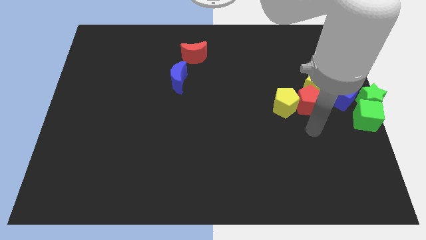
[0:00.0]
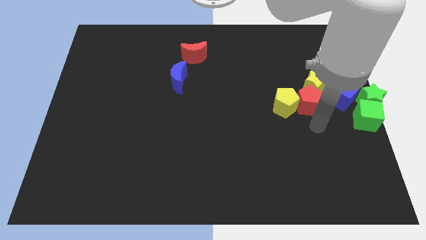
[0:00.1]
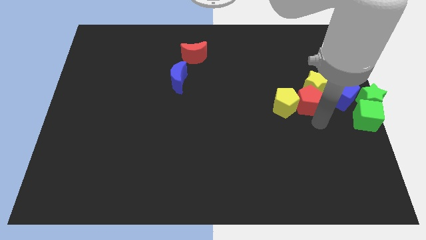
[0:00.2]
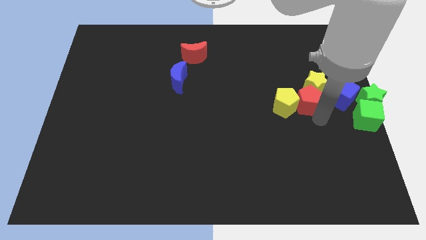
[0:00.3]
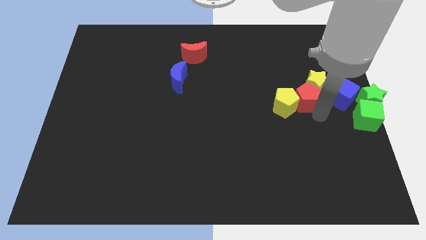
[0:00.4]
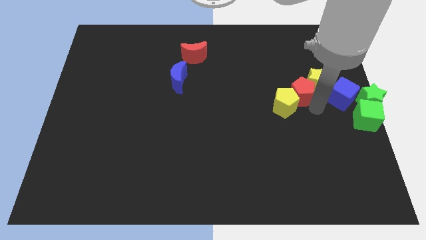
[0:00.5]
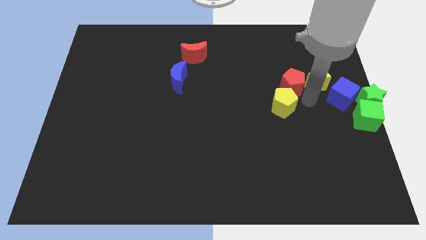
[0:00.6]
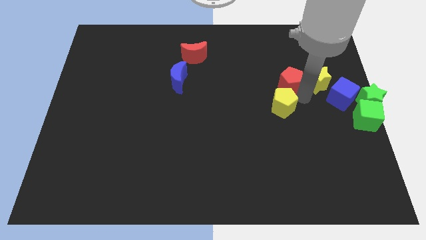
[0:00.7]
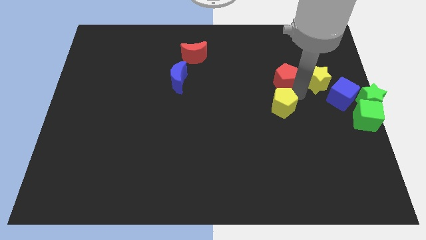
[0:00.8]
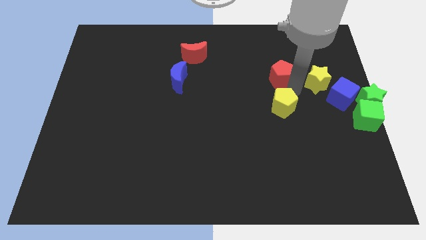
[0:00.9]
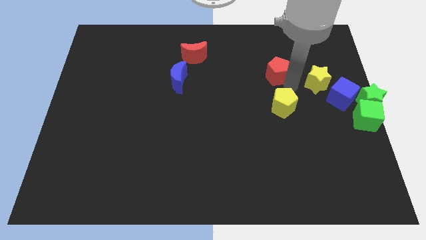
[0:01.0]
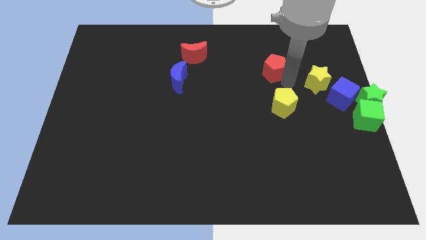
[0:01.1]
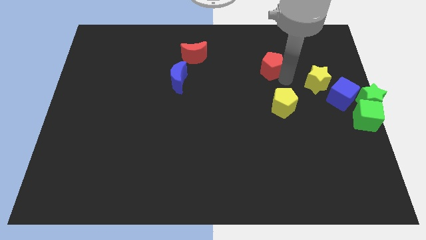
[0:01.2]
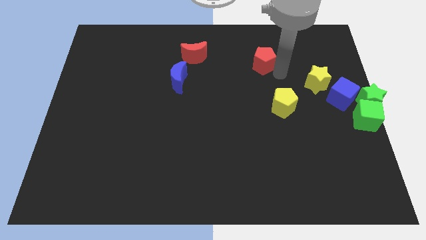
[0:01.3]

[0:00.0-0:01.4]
separate the red pentagon and the yellow blocks

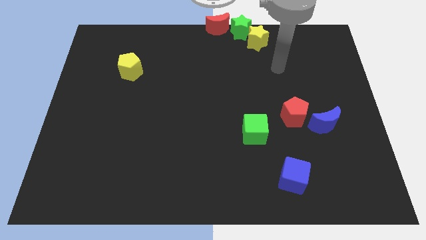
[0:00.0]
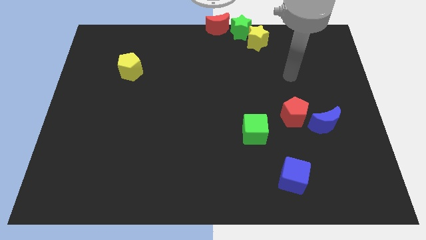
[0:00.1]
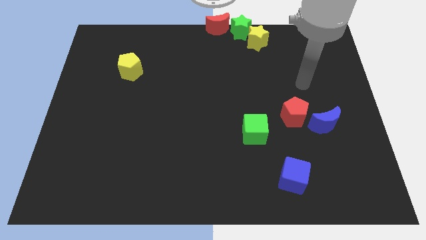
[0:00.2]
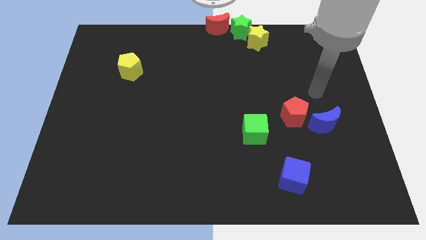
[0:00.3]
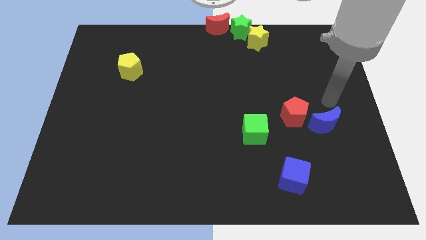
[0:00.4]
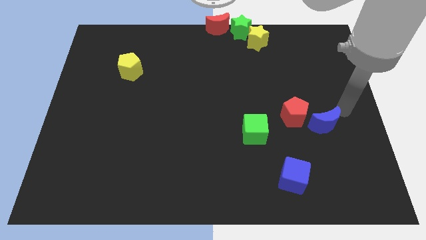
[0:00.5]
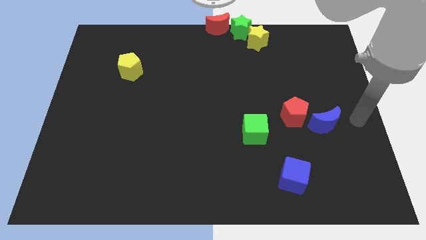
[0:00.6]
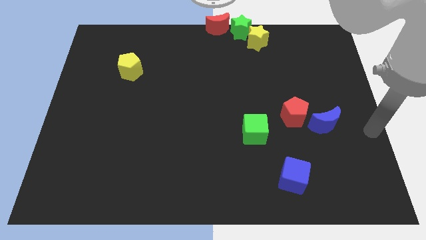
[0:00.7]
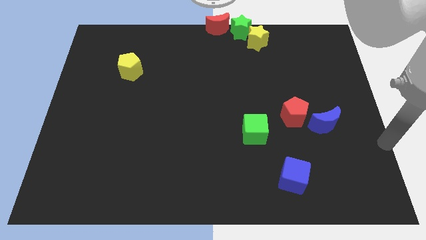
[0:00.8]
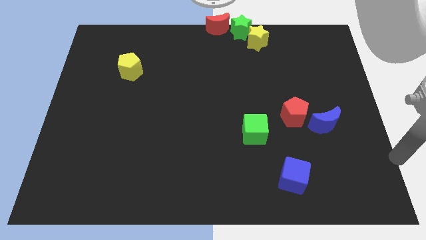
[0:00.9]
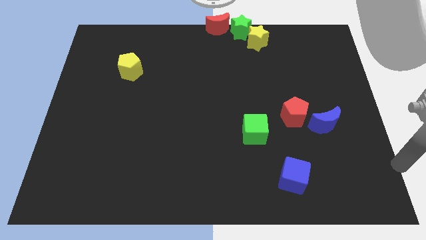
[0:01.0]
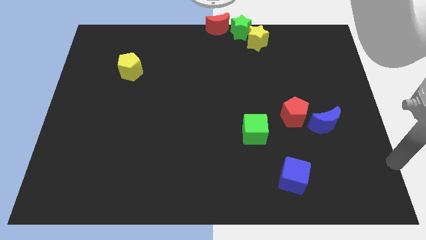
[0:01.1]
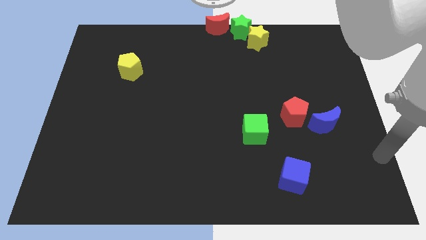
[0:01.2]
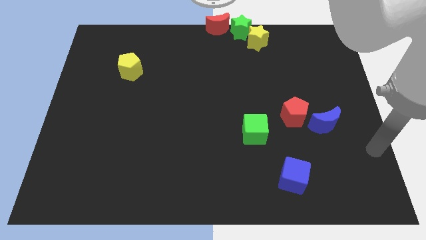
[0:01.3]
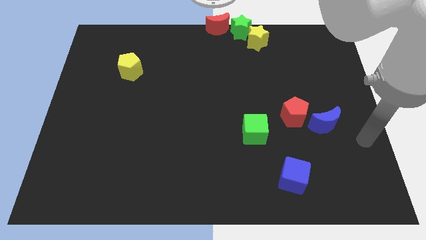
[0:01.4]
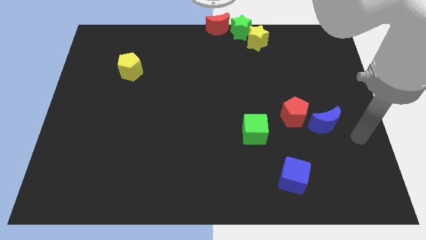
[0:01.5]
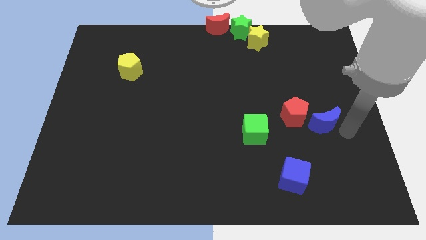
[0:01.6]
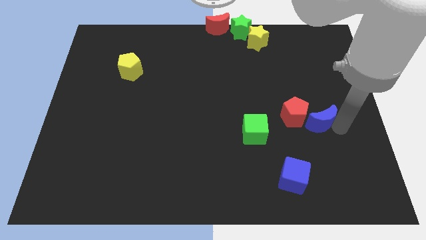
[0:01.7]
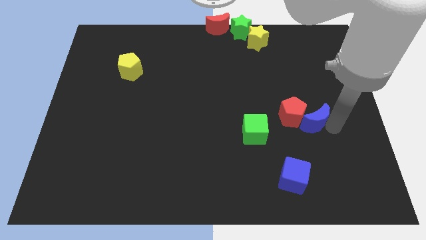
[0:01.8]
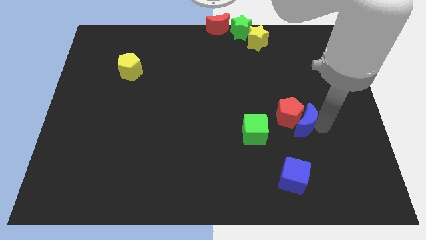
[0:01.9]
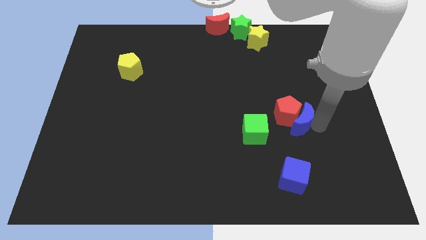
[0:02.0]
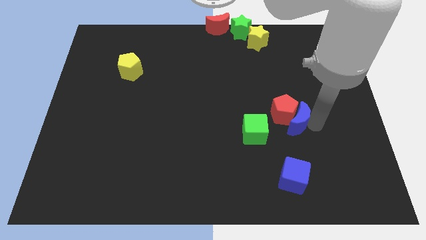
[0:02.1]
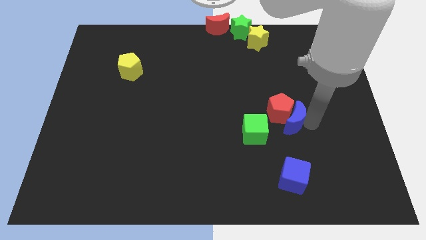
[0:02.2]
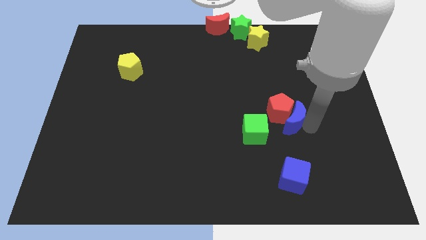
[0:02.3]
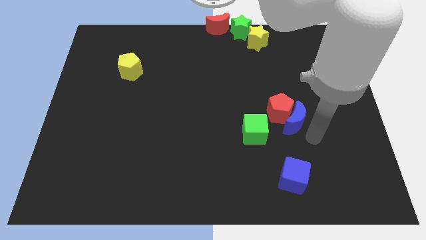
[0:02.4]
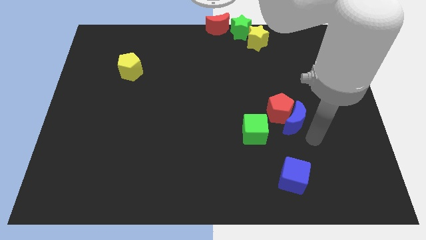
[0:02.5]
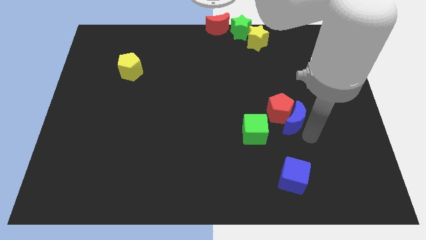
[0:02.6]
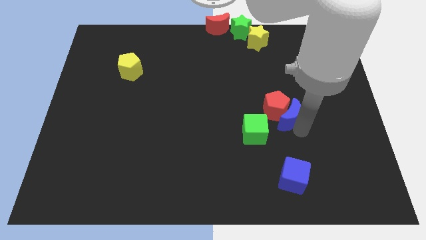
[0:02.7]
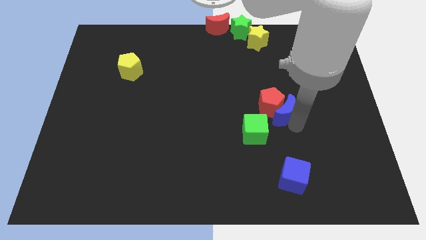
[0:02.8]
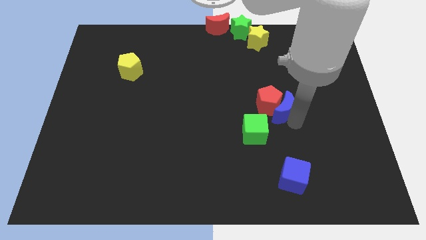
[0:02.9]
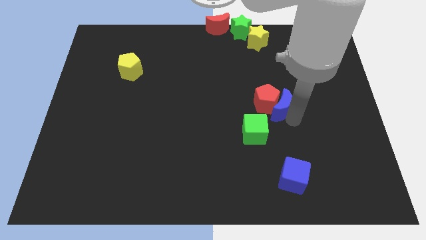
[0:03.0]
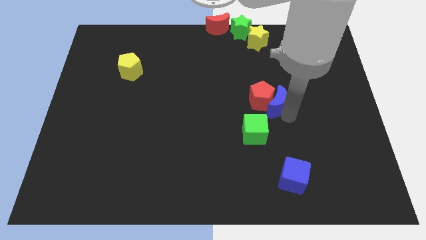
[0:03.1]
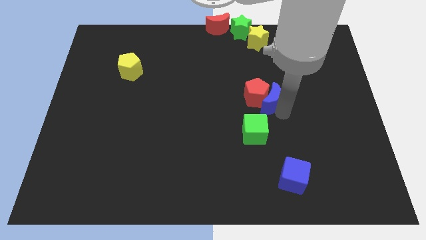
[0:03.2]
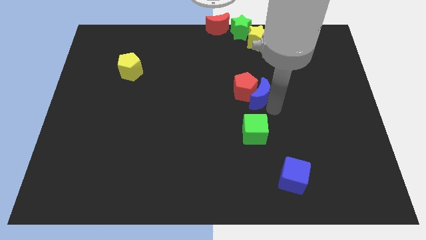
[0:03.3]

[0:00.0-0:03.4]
push the red pentagon and blue crescent to the left side

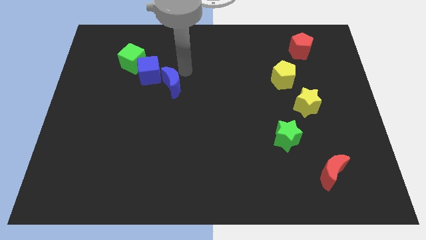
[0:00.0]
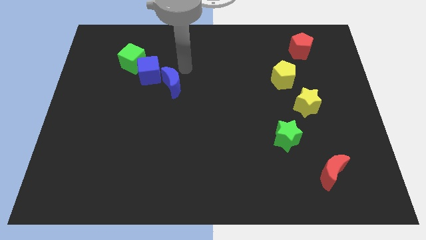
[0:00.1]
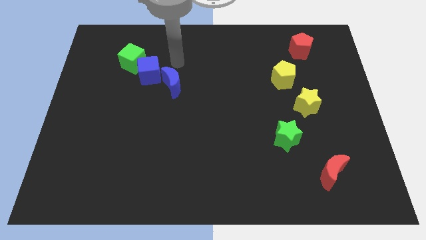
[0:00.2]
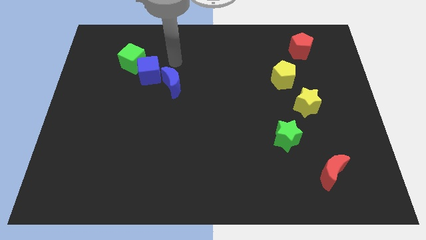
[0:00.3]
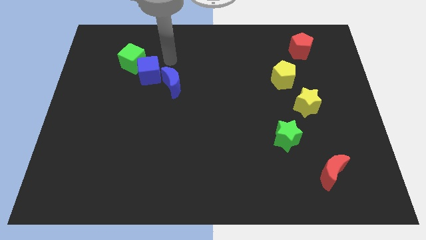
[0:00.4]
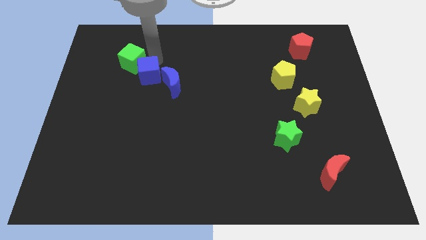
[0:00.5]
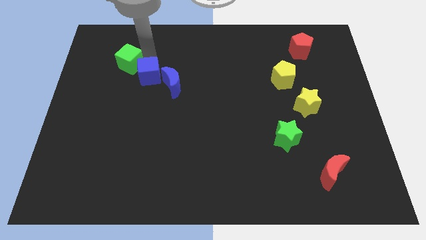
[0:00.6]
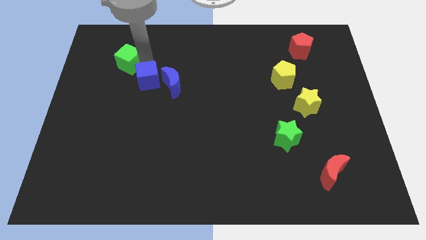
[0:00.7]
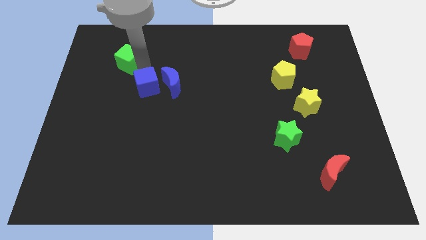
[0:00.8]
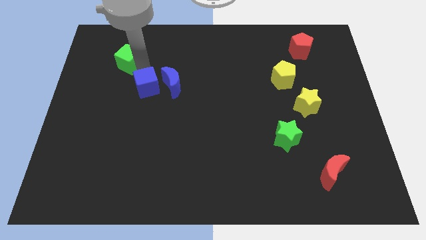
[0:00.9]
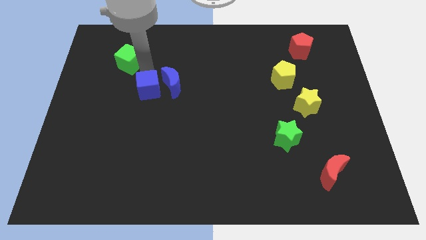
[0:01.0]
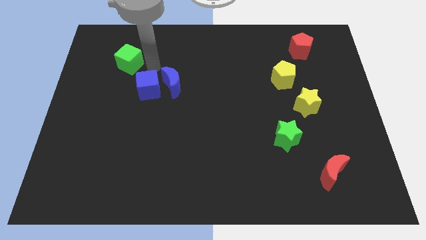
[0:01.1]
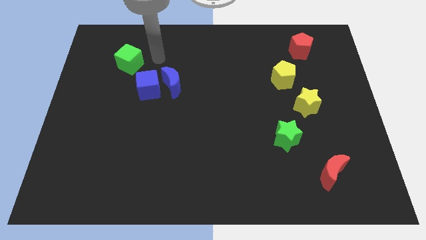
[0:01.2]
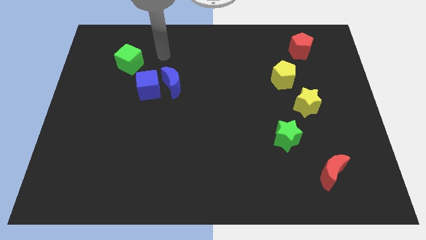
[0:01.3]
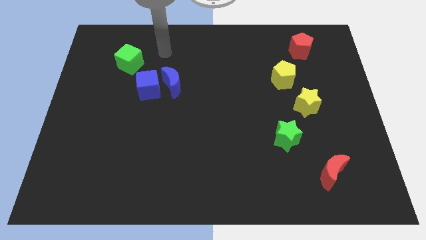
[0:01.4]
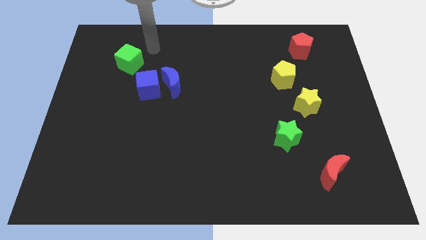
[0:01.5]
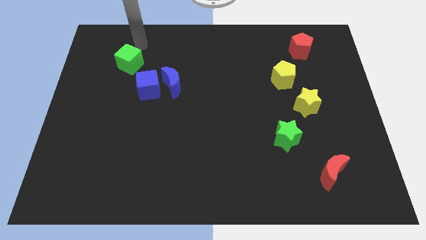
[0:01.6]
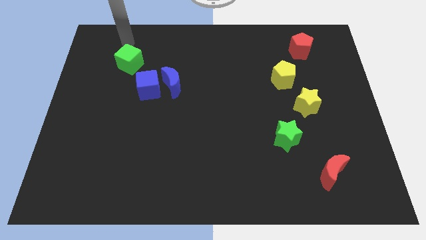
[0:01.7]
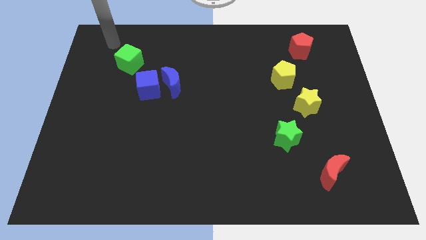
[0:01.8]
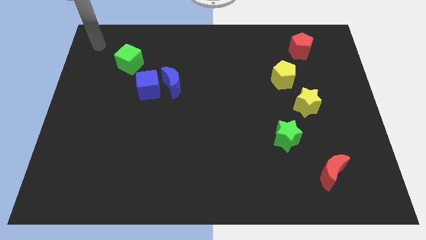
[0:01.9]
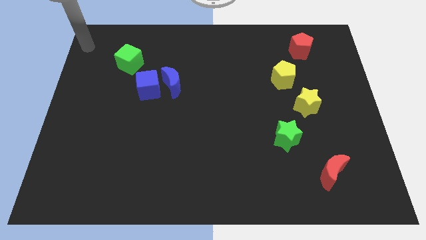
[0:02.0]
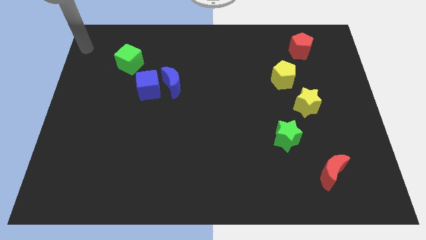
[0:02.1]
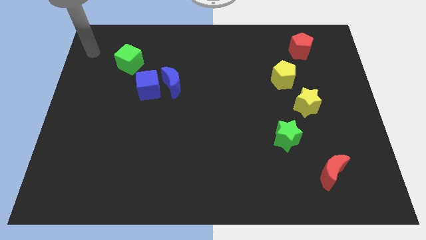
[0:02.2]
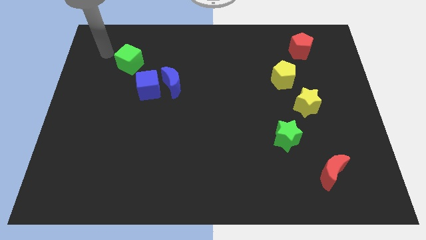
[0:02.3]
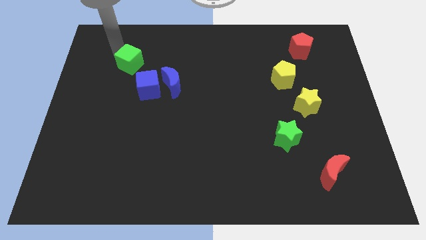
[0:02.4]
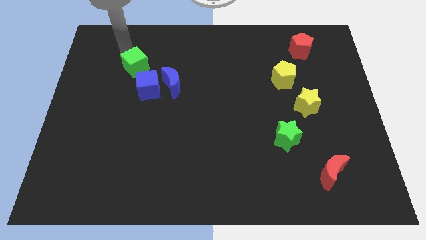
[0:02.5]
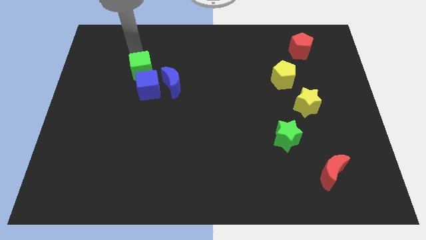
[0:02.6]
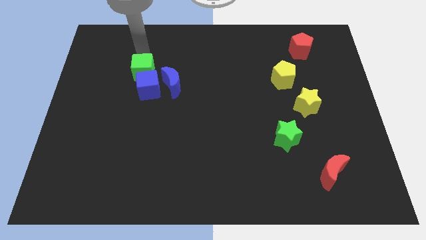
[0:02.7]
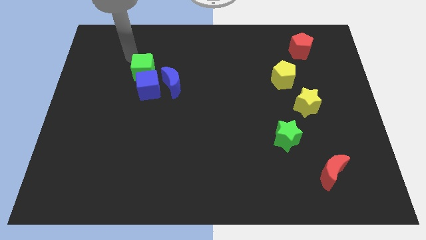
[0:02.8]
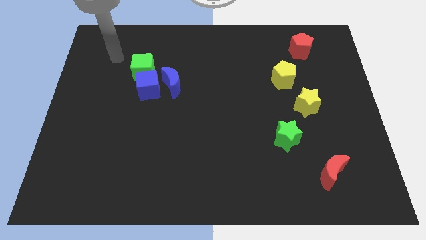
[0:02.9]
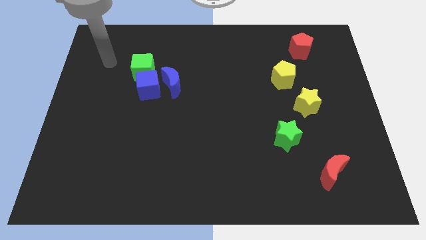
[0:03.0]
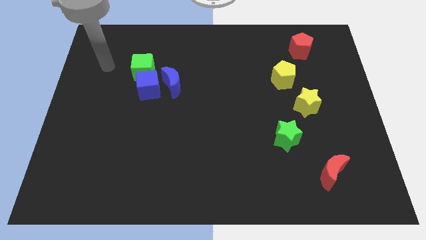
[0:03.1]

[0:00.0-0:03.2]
push the green cube to the top of the blue cube

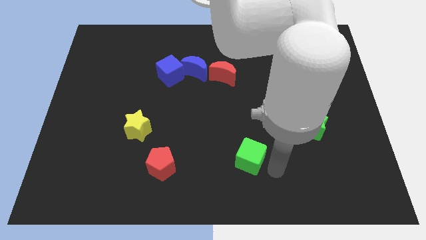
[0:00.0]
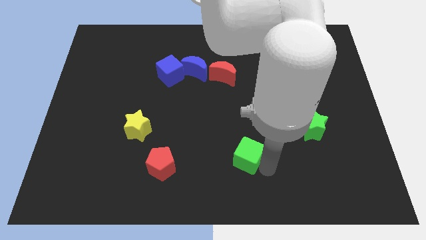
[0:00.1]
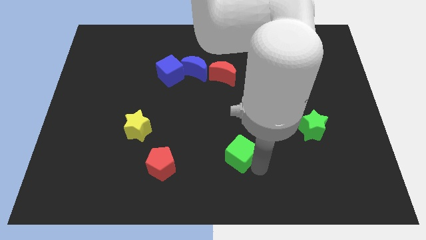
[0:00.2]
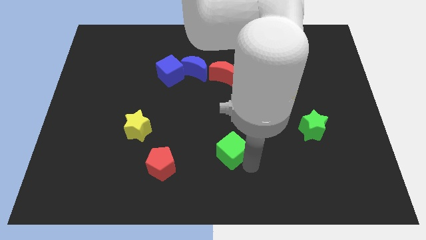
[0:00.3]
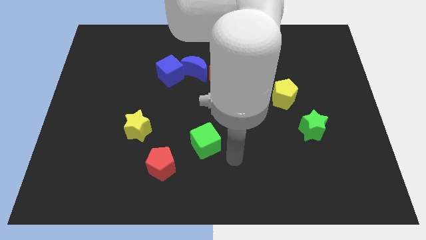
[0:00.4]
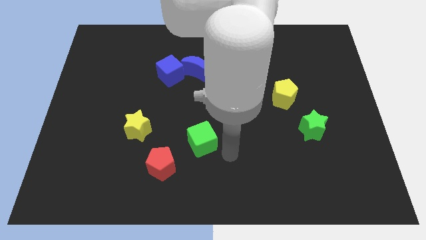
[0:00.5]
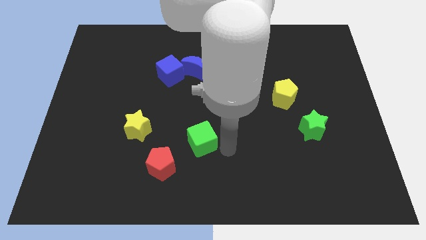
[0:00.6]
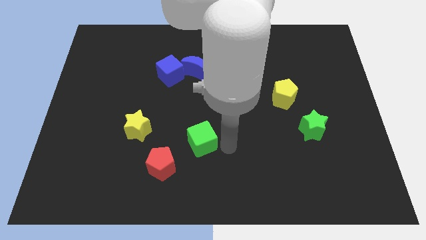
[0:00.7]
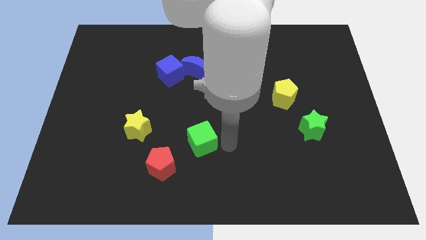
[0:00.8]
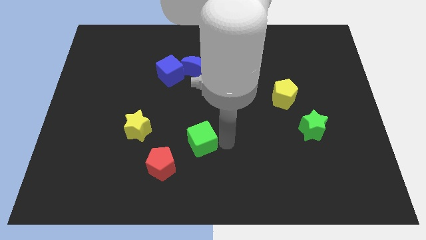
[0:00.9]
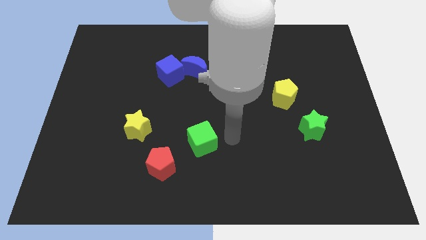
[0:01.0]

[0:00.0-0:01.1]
place the green cube at the top right of the red pentagon
